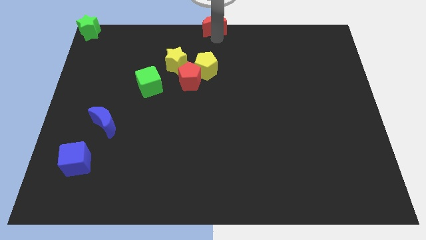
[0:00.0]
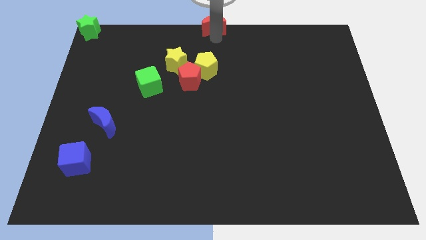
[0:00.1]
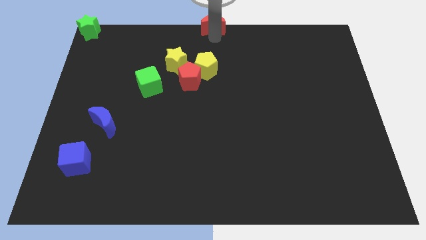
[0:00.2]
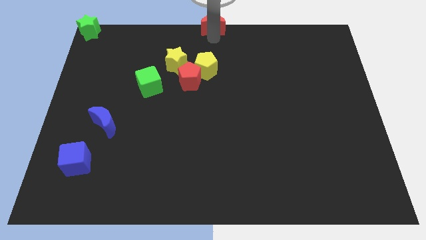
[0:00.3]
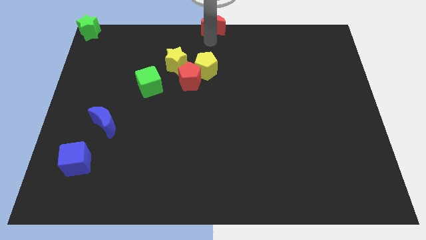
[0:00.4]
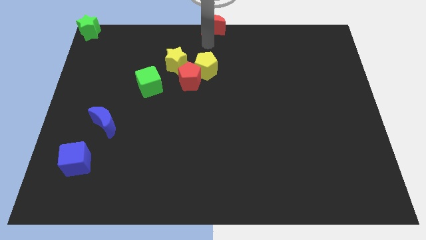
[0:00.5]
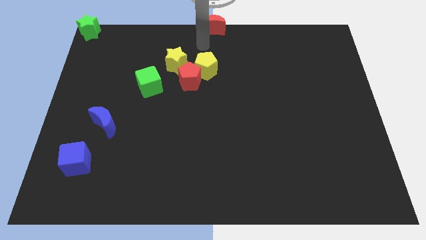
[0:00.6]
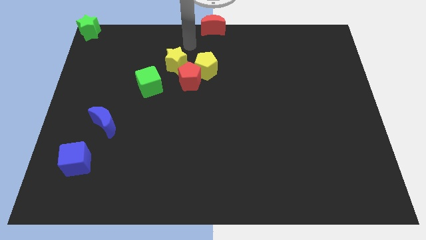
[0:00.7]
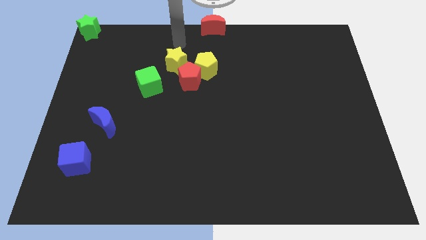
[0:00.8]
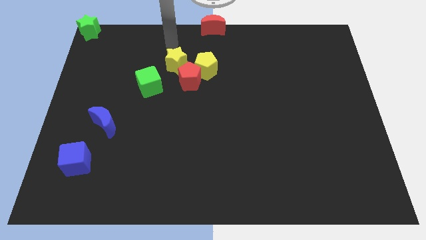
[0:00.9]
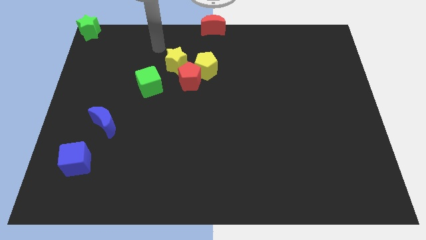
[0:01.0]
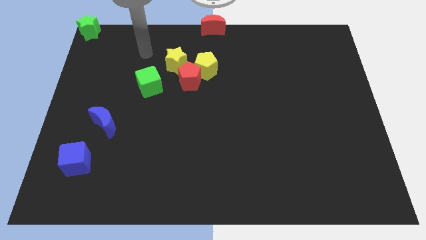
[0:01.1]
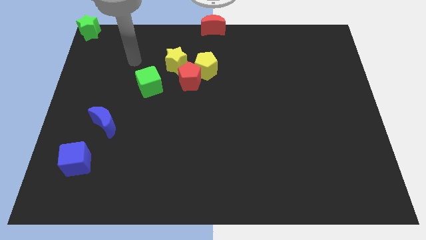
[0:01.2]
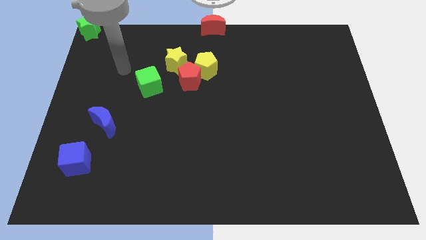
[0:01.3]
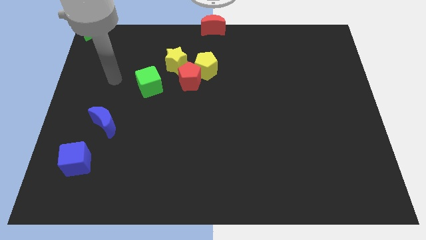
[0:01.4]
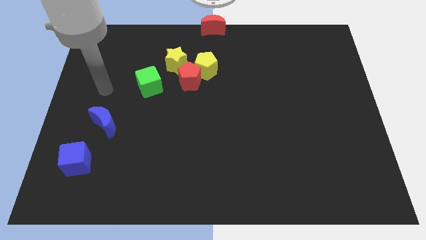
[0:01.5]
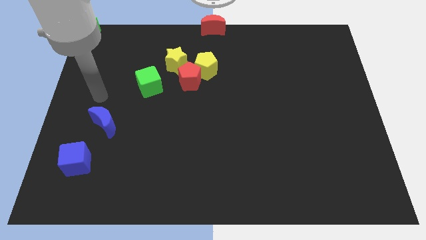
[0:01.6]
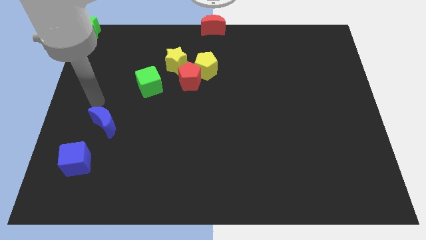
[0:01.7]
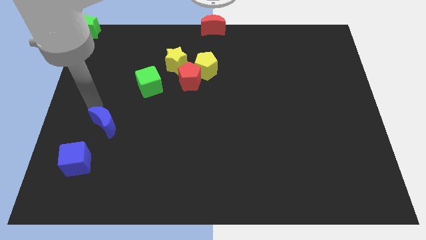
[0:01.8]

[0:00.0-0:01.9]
move the arm towards the blue moon

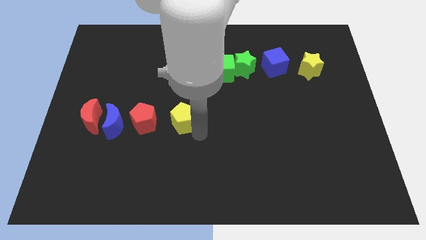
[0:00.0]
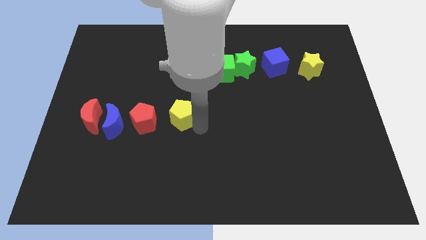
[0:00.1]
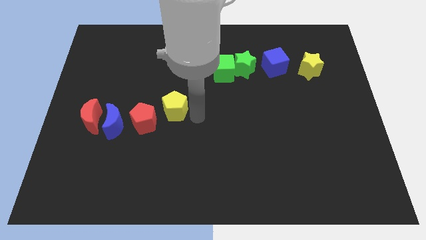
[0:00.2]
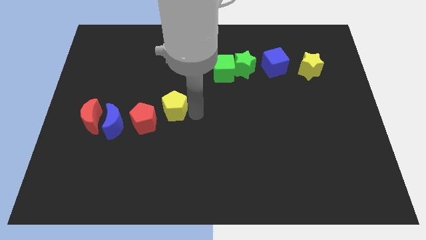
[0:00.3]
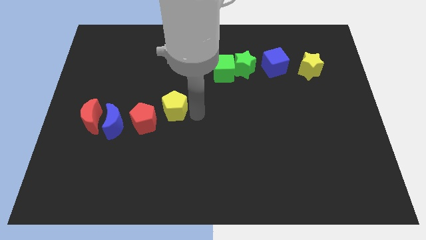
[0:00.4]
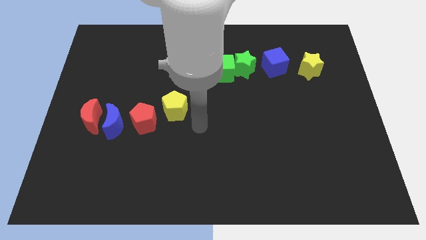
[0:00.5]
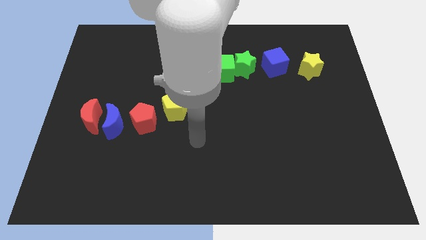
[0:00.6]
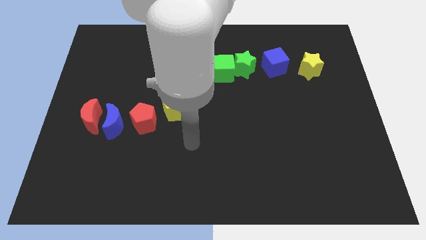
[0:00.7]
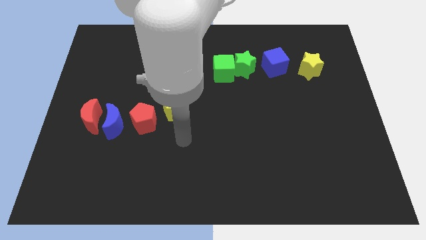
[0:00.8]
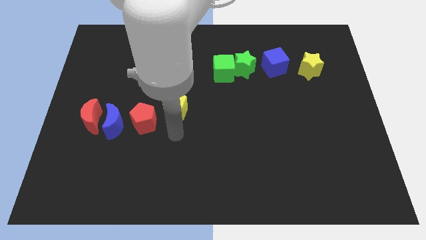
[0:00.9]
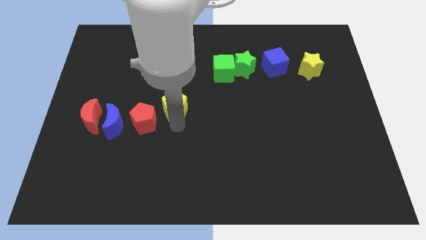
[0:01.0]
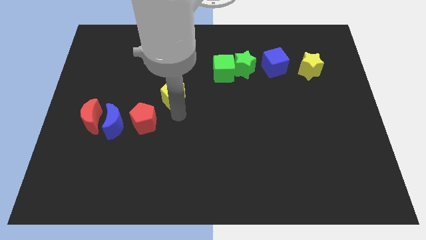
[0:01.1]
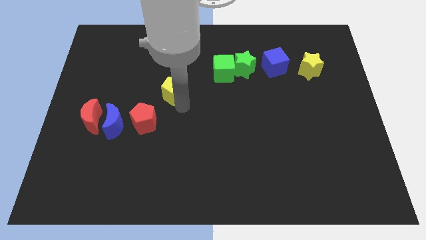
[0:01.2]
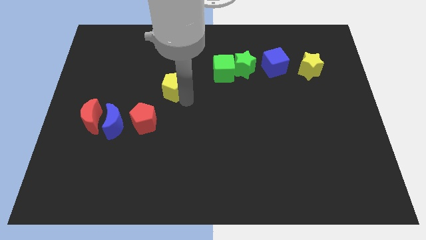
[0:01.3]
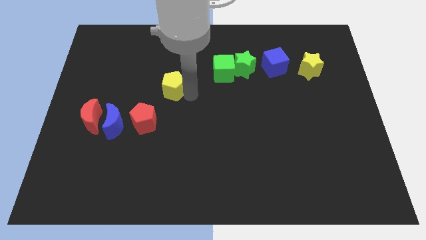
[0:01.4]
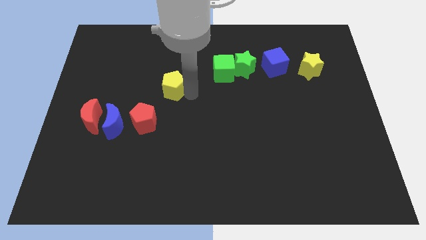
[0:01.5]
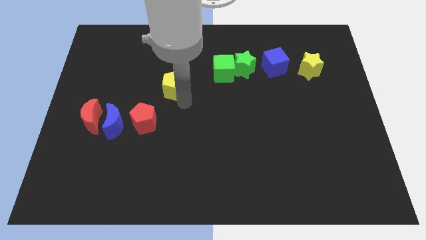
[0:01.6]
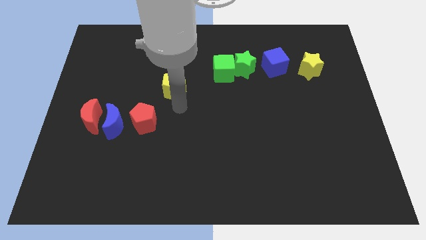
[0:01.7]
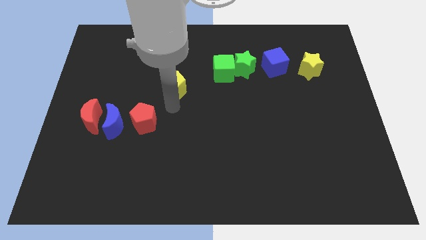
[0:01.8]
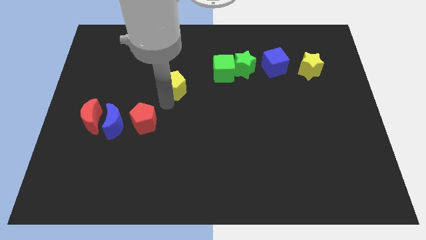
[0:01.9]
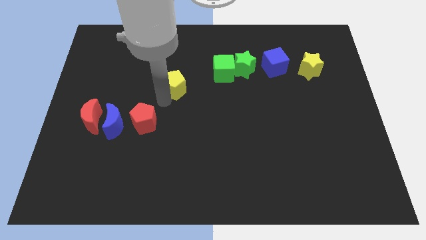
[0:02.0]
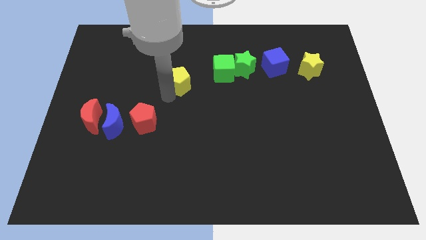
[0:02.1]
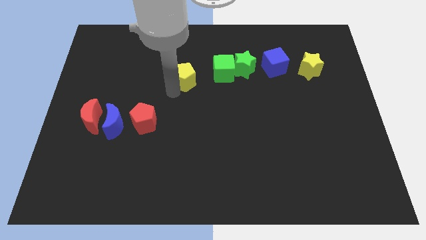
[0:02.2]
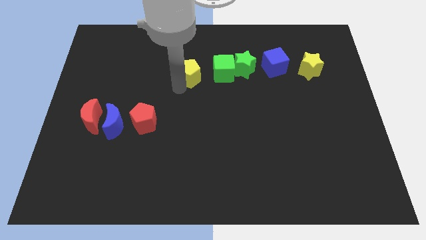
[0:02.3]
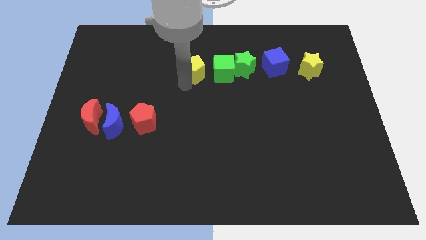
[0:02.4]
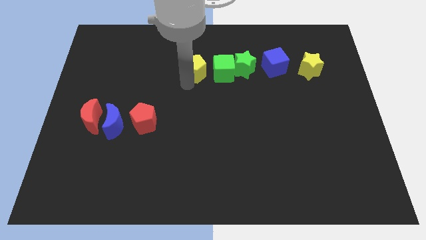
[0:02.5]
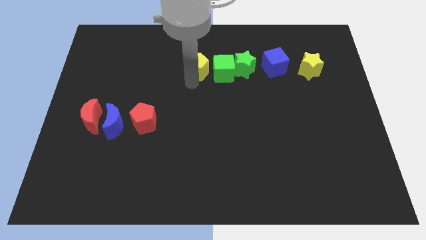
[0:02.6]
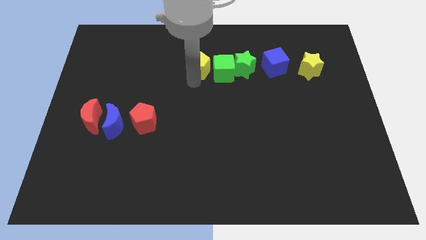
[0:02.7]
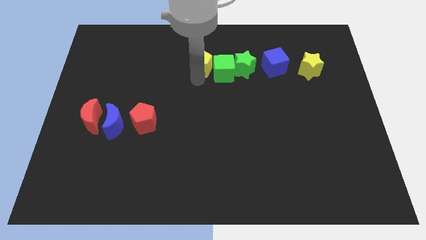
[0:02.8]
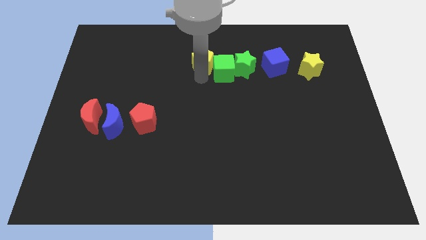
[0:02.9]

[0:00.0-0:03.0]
move yellow pentagon into green cube

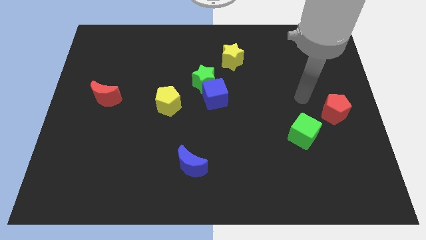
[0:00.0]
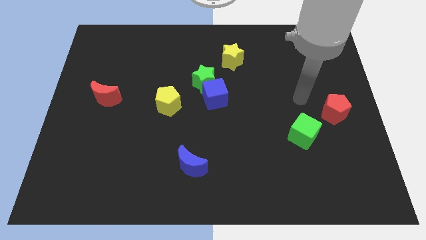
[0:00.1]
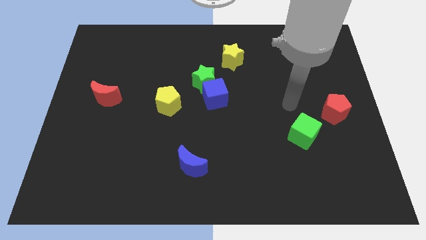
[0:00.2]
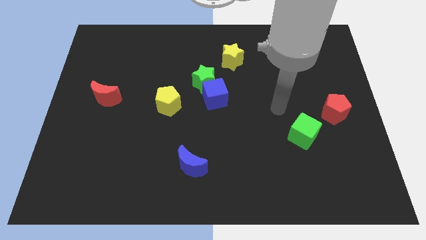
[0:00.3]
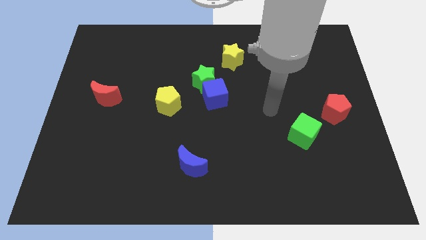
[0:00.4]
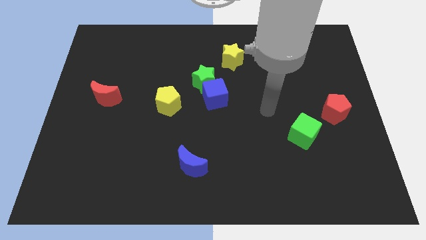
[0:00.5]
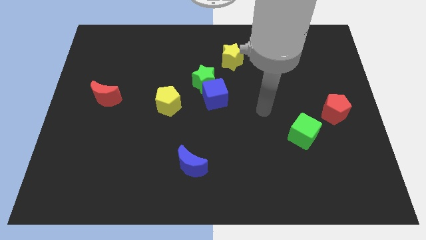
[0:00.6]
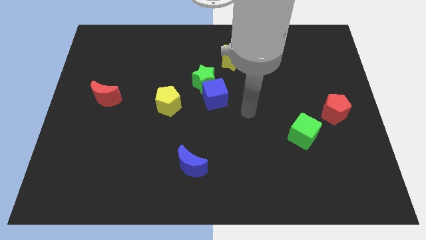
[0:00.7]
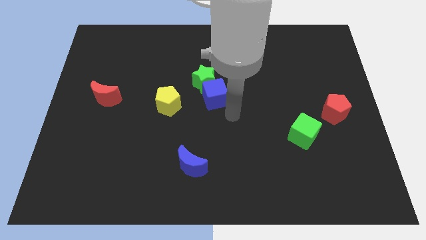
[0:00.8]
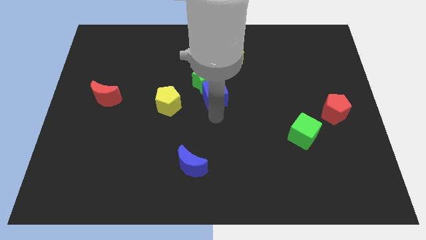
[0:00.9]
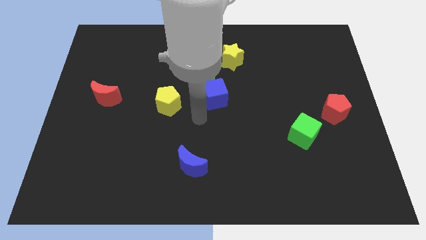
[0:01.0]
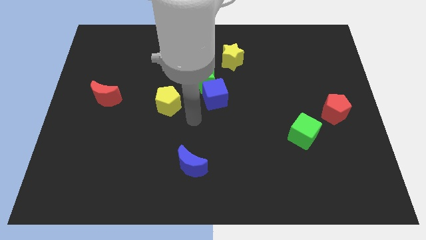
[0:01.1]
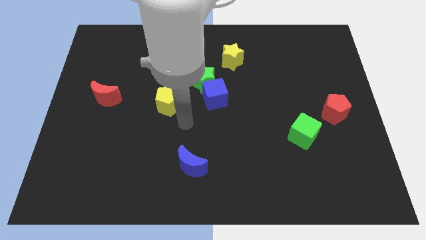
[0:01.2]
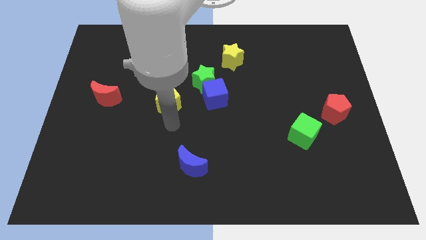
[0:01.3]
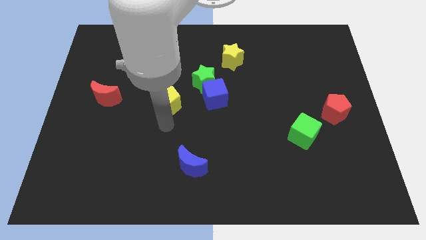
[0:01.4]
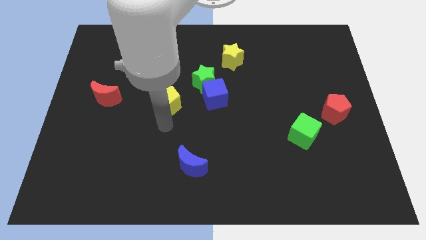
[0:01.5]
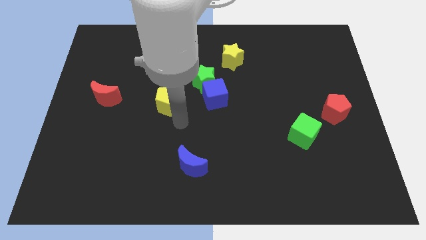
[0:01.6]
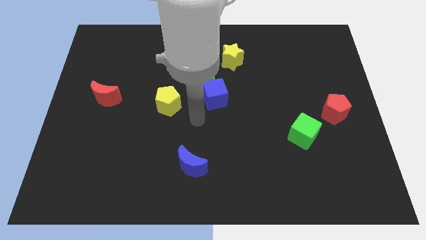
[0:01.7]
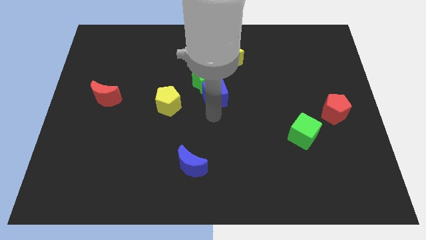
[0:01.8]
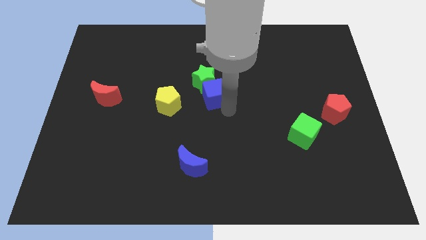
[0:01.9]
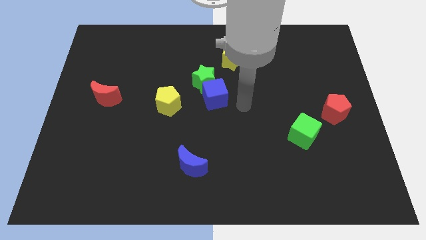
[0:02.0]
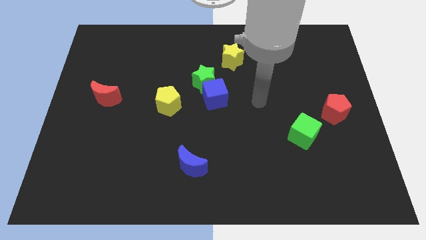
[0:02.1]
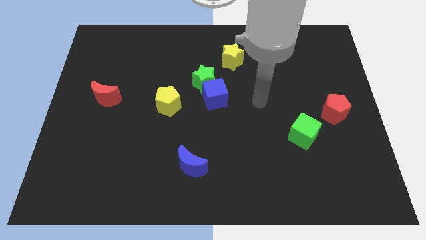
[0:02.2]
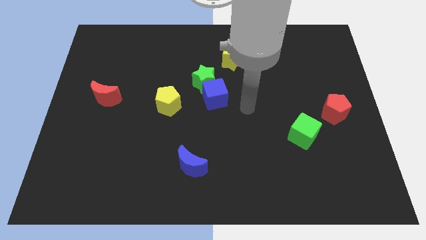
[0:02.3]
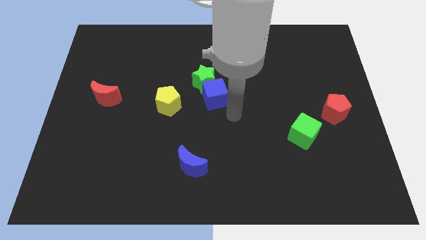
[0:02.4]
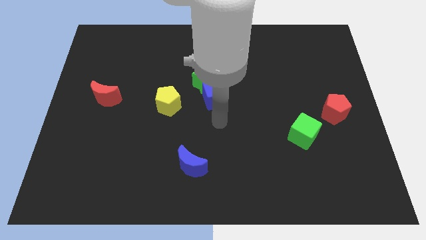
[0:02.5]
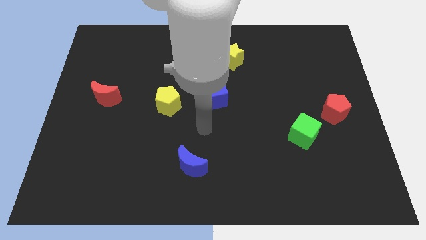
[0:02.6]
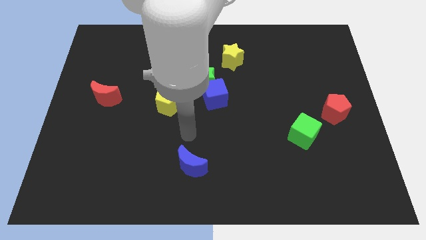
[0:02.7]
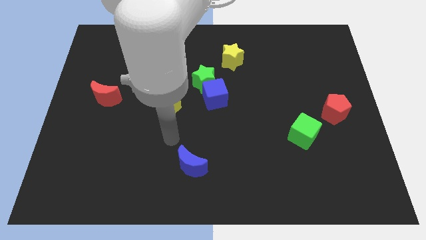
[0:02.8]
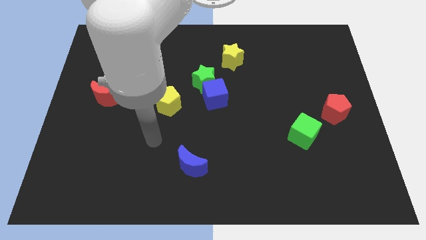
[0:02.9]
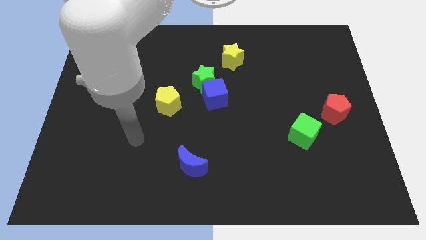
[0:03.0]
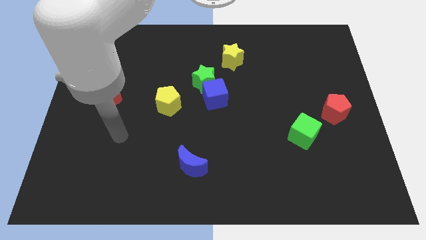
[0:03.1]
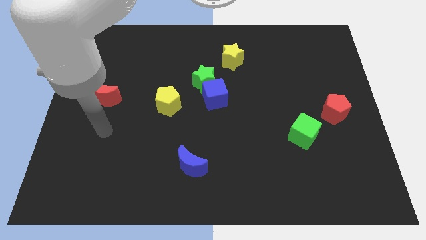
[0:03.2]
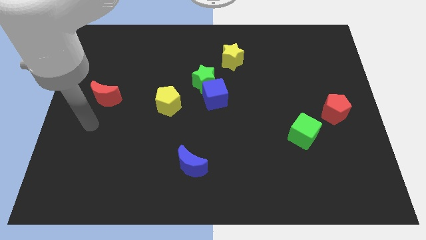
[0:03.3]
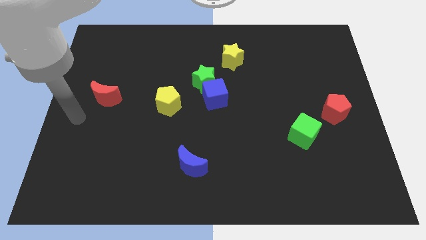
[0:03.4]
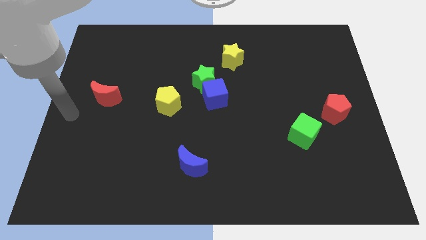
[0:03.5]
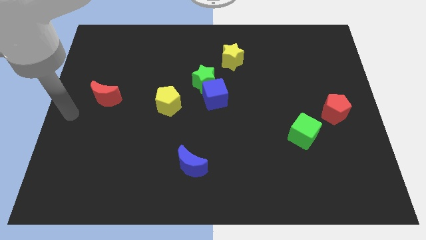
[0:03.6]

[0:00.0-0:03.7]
move your arm towards the red moon

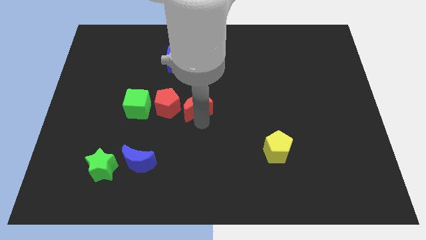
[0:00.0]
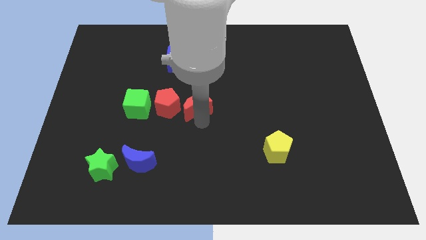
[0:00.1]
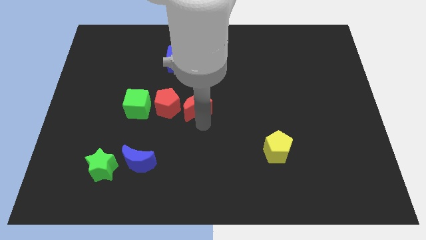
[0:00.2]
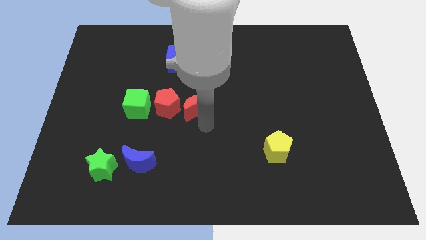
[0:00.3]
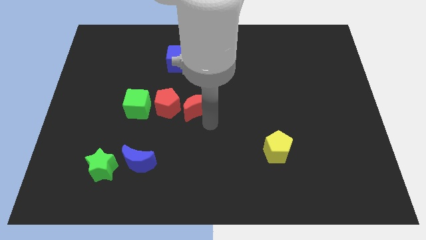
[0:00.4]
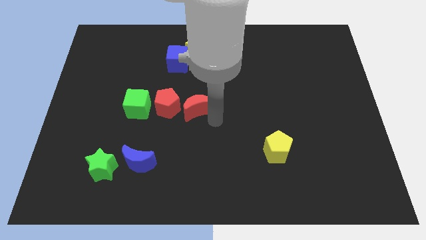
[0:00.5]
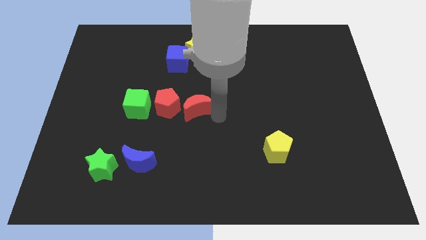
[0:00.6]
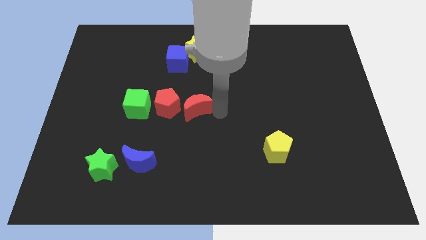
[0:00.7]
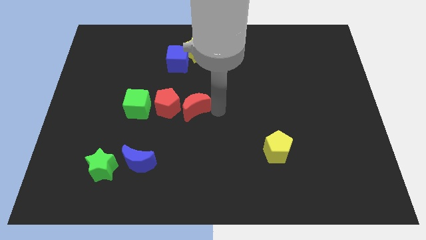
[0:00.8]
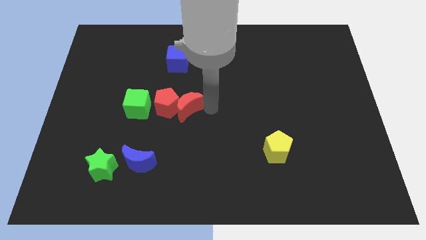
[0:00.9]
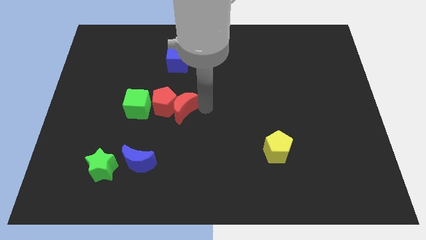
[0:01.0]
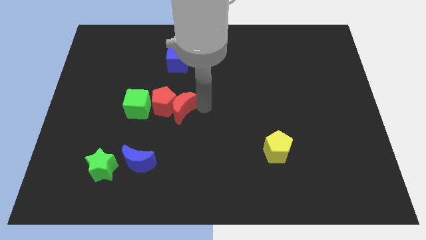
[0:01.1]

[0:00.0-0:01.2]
push the red moon into the red pentagon
